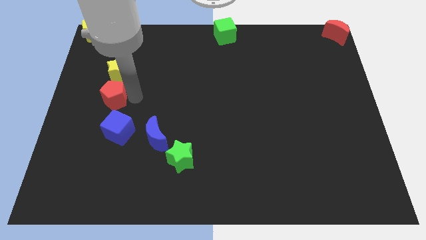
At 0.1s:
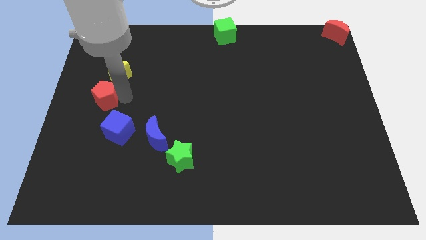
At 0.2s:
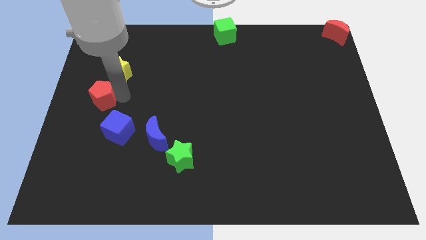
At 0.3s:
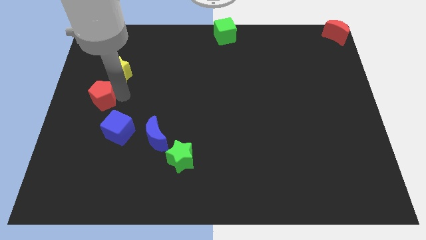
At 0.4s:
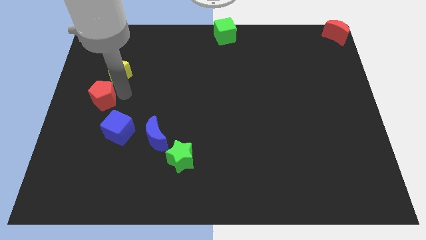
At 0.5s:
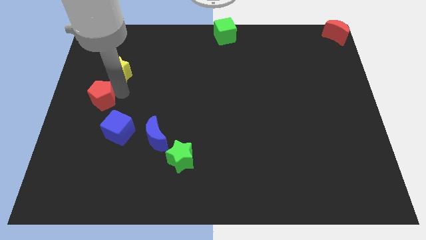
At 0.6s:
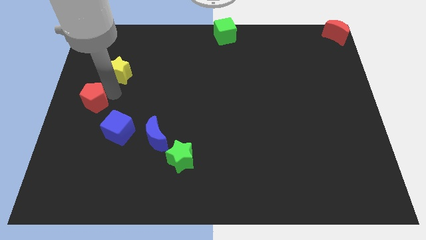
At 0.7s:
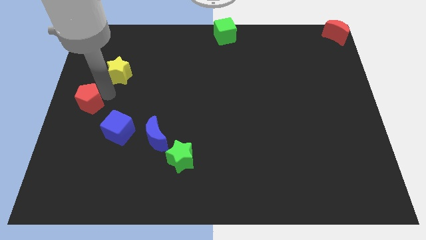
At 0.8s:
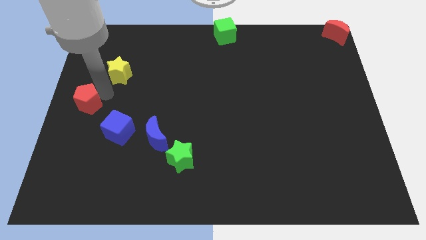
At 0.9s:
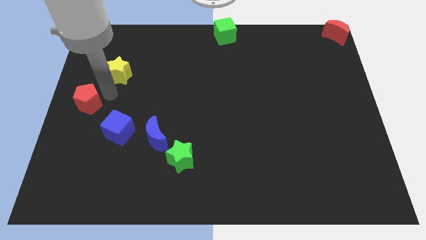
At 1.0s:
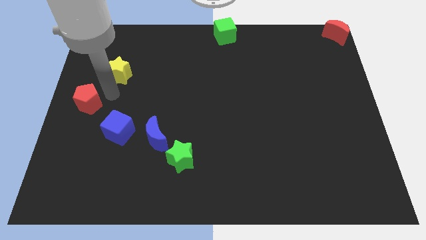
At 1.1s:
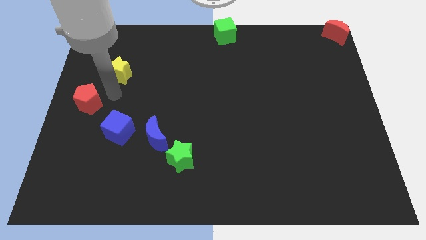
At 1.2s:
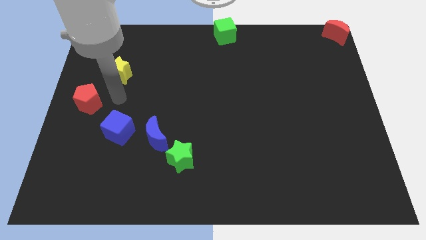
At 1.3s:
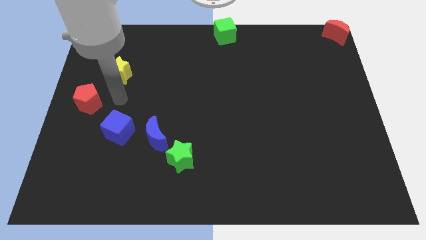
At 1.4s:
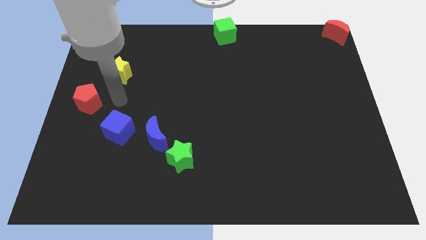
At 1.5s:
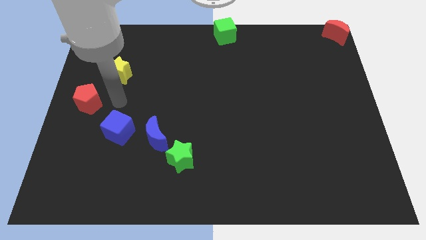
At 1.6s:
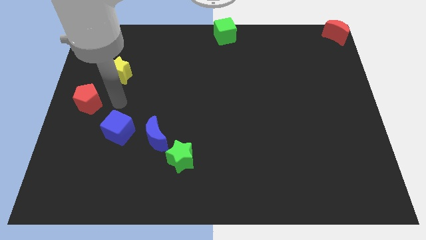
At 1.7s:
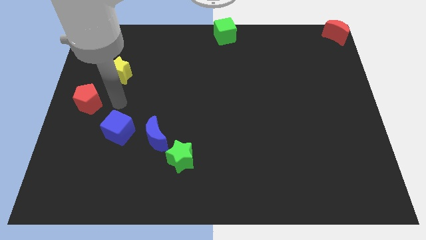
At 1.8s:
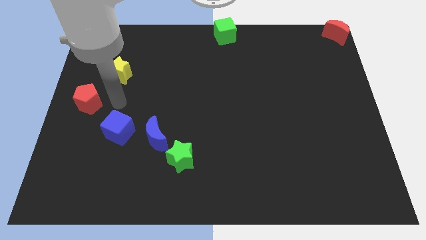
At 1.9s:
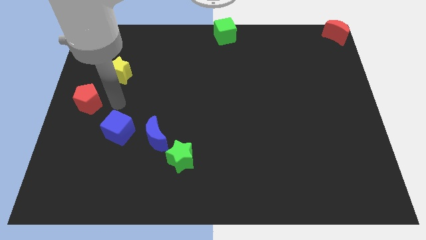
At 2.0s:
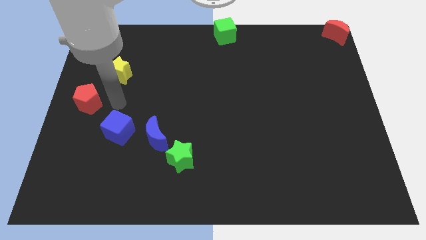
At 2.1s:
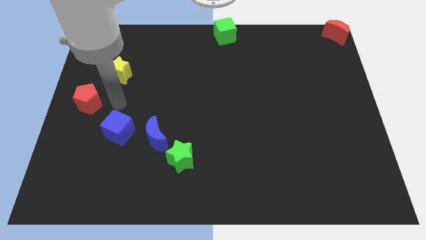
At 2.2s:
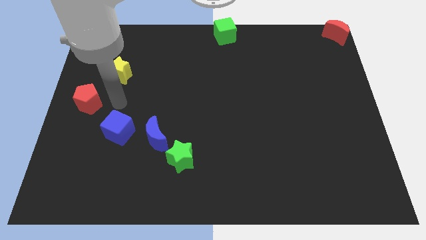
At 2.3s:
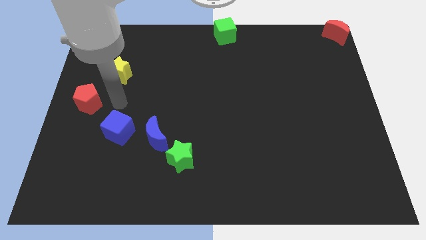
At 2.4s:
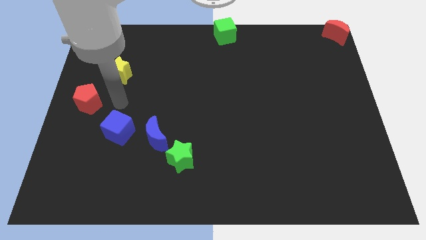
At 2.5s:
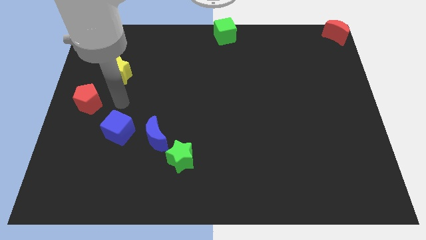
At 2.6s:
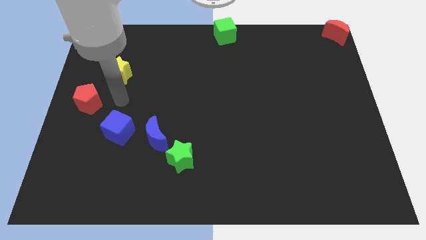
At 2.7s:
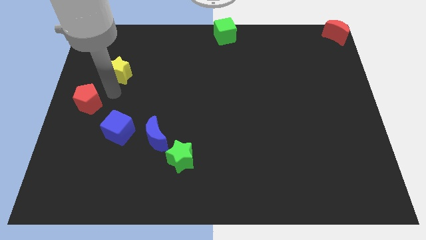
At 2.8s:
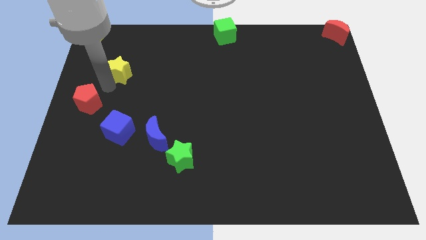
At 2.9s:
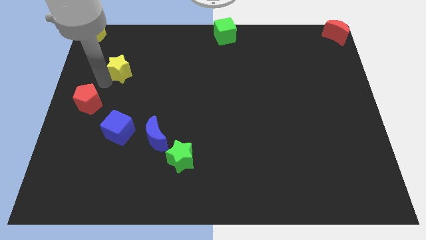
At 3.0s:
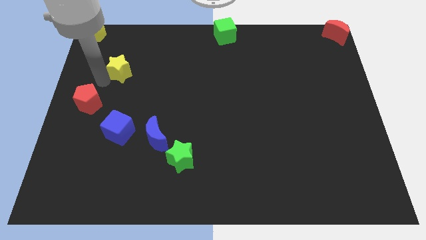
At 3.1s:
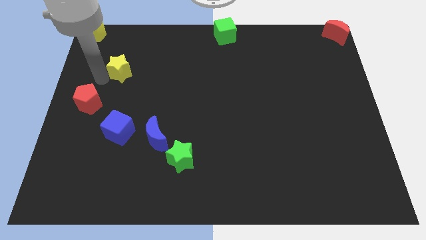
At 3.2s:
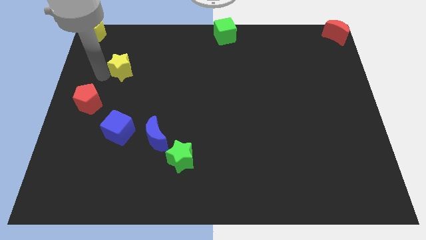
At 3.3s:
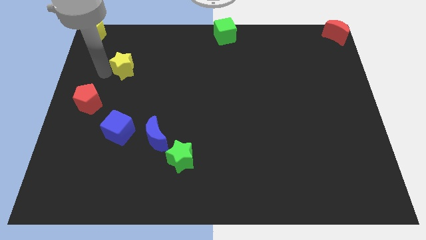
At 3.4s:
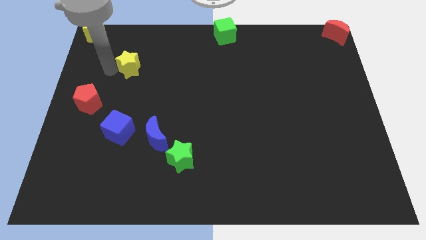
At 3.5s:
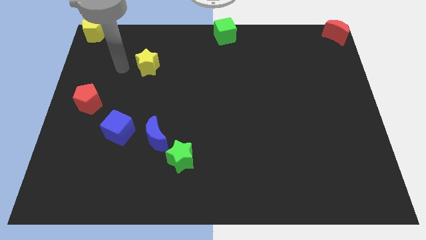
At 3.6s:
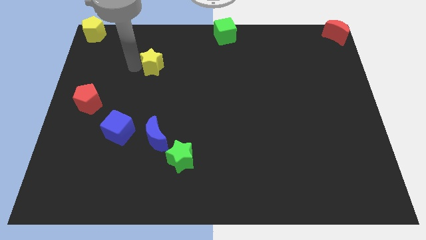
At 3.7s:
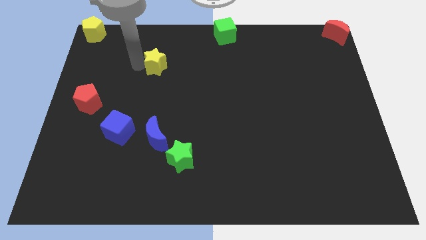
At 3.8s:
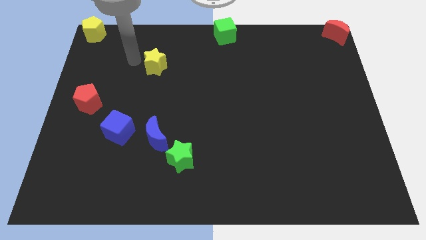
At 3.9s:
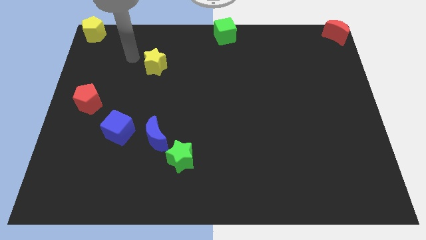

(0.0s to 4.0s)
move yellow star towards the right

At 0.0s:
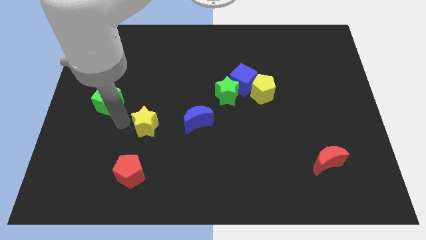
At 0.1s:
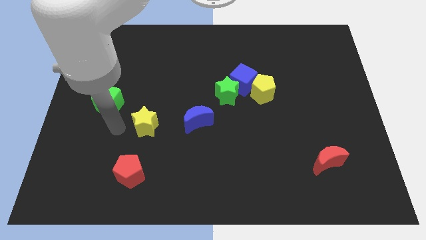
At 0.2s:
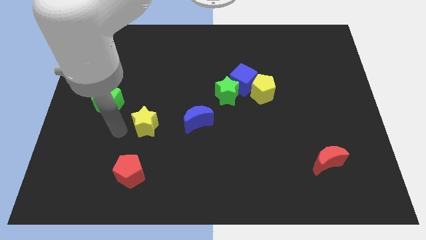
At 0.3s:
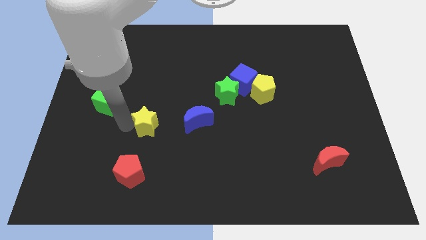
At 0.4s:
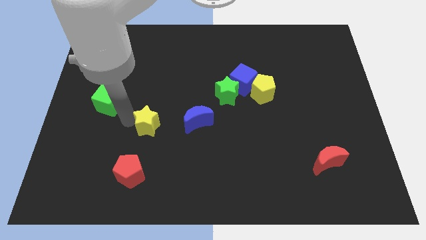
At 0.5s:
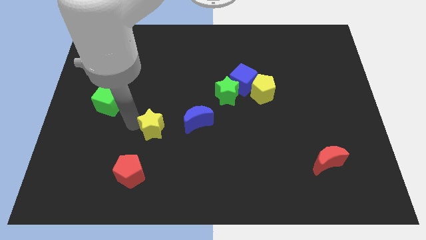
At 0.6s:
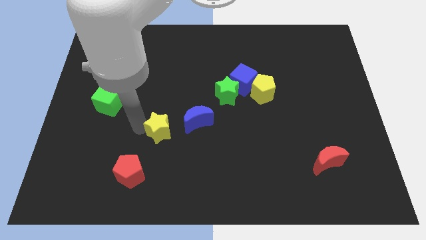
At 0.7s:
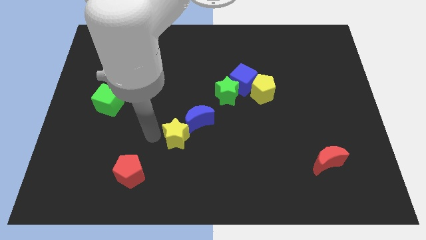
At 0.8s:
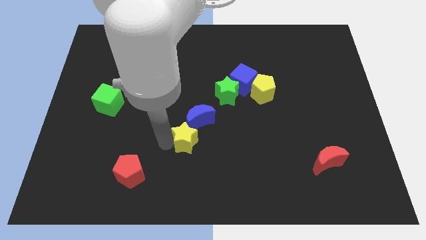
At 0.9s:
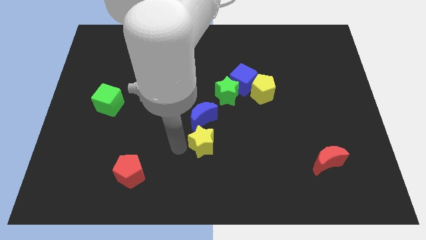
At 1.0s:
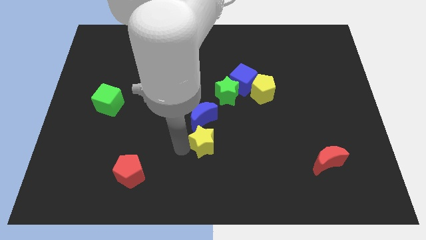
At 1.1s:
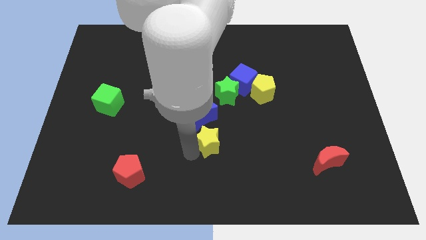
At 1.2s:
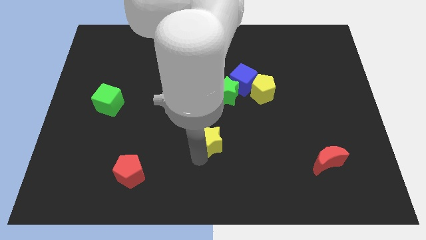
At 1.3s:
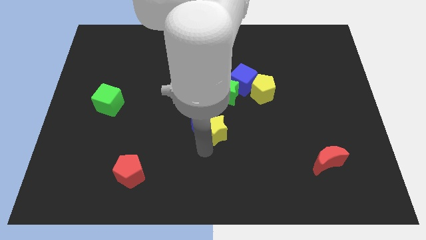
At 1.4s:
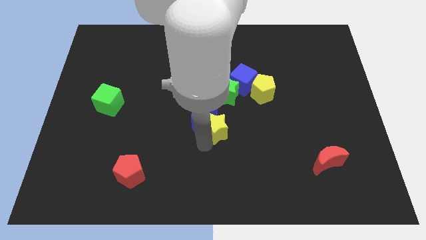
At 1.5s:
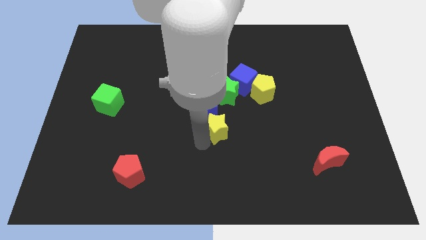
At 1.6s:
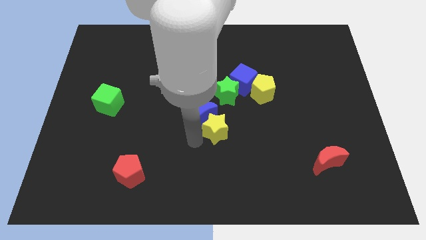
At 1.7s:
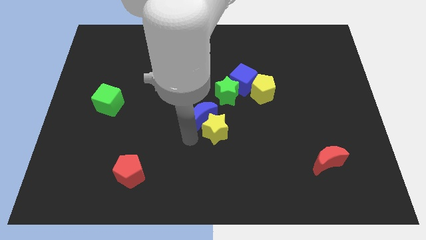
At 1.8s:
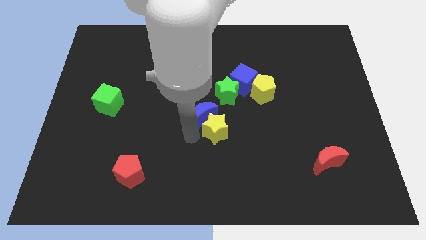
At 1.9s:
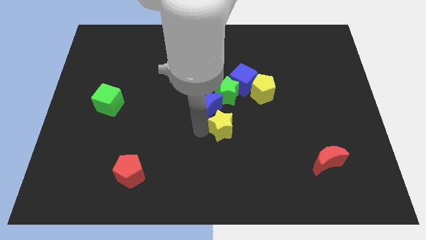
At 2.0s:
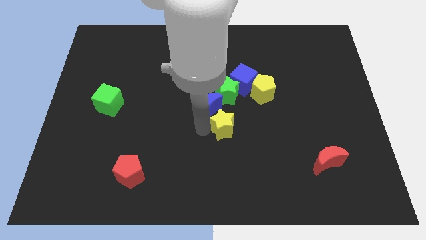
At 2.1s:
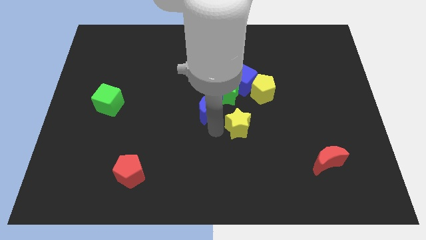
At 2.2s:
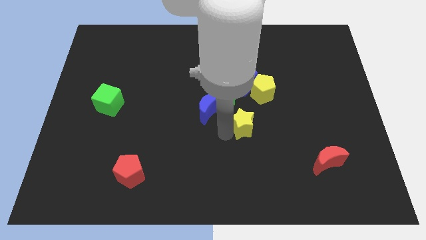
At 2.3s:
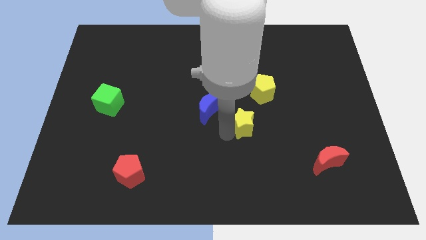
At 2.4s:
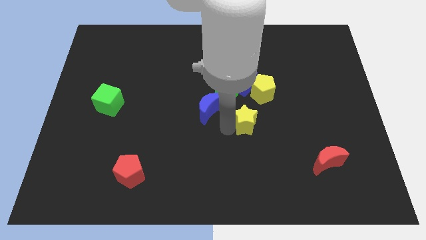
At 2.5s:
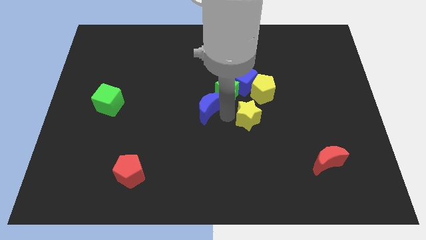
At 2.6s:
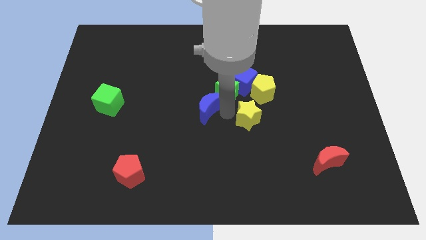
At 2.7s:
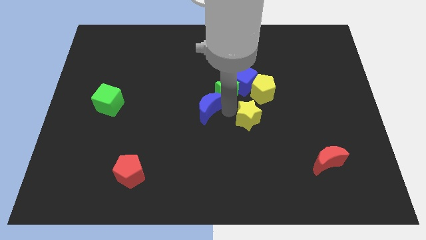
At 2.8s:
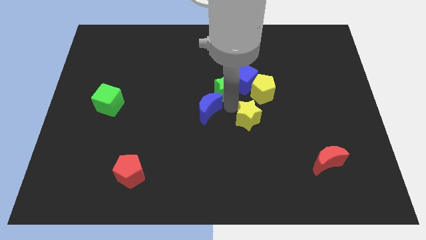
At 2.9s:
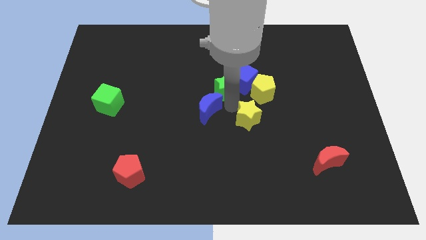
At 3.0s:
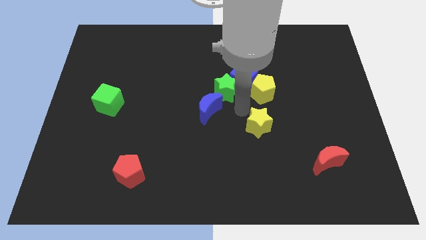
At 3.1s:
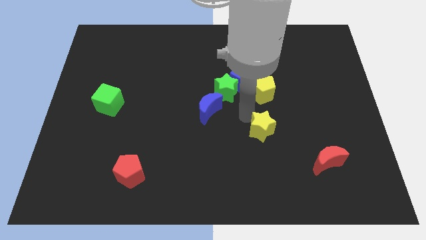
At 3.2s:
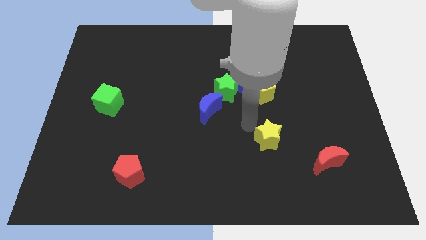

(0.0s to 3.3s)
move the yellow star to the bottom side of the yellow pentagon

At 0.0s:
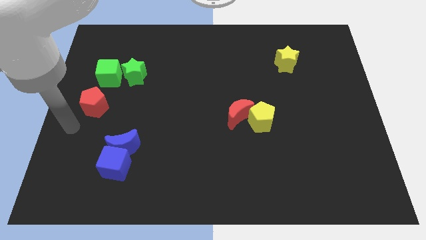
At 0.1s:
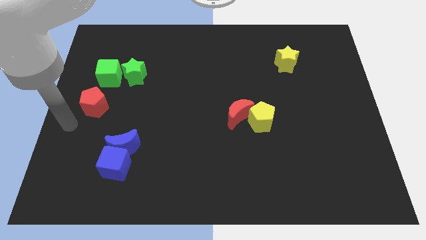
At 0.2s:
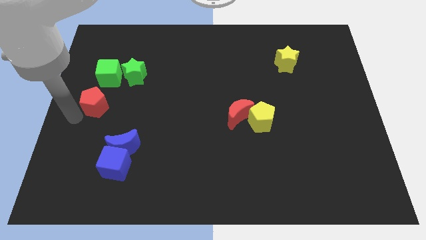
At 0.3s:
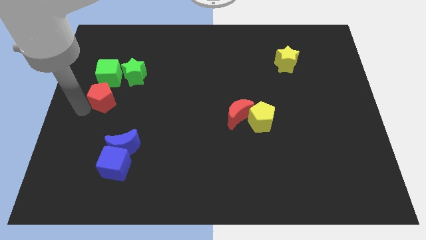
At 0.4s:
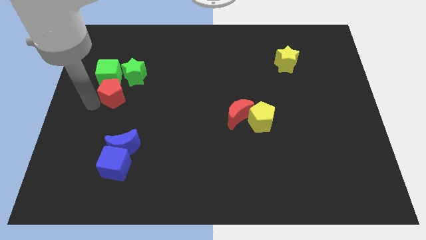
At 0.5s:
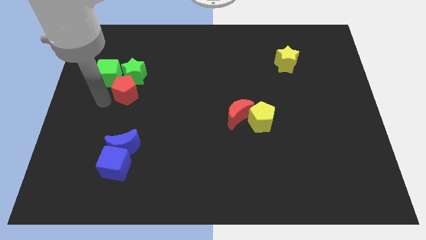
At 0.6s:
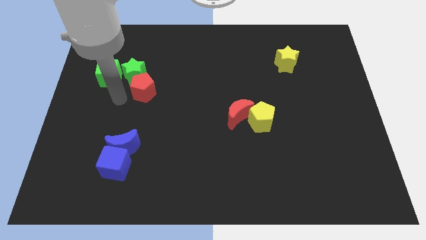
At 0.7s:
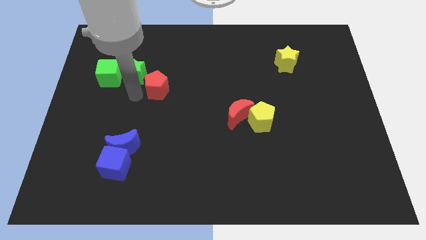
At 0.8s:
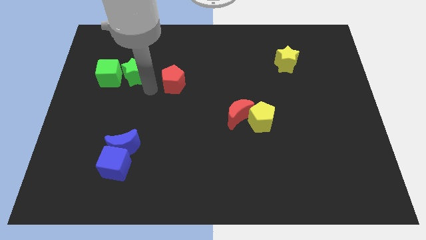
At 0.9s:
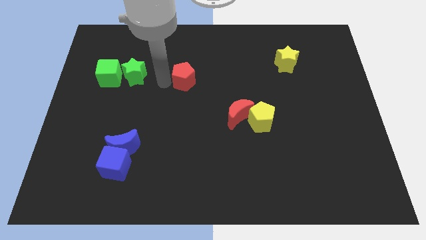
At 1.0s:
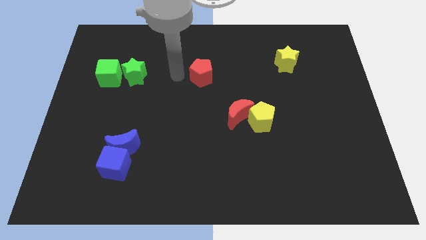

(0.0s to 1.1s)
place red pentagon parallel to green star

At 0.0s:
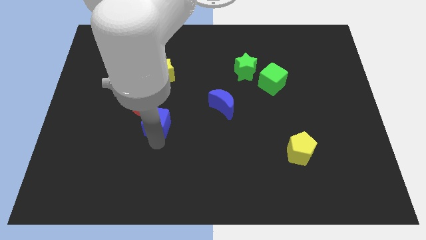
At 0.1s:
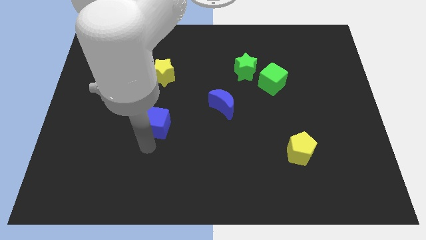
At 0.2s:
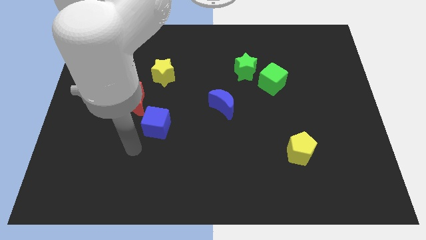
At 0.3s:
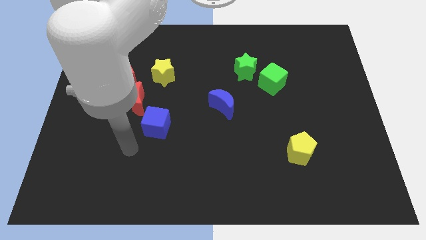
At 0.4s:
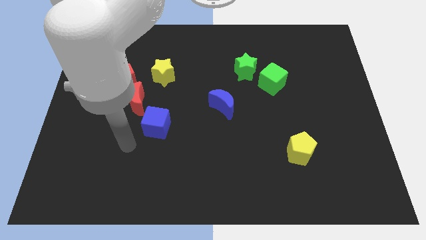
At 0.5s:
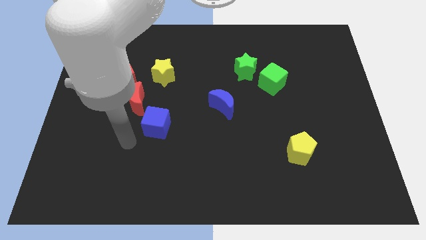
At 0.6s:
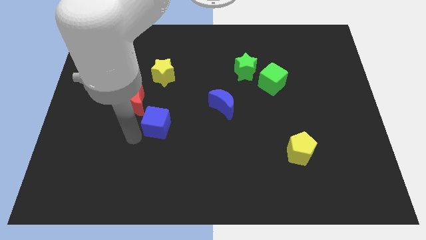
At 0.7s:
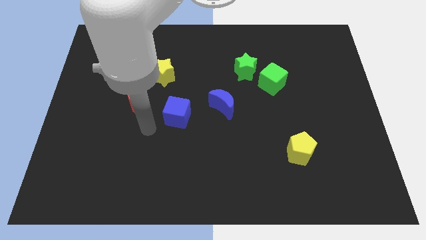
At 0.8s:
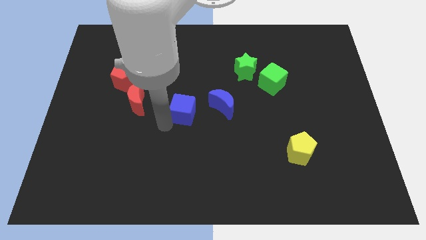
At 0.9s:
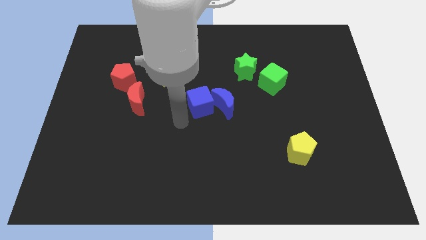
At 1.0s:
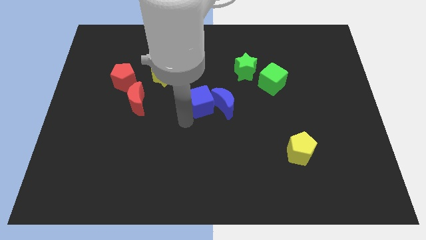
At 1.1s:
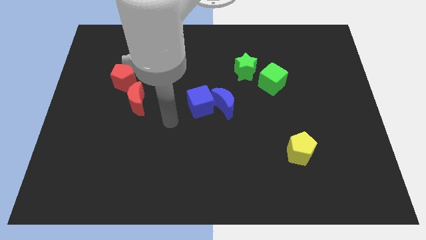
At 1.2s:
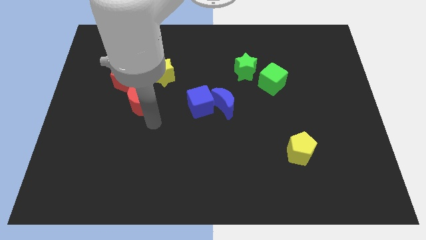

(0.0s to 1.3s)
push the blue cube into the blue crescent
